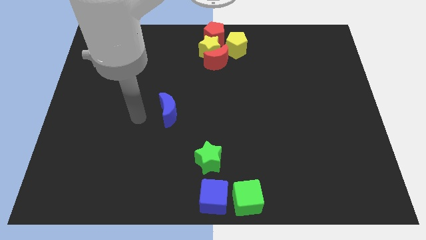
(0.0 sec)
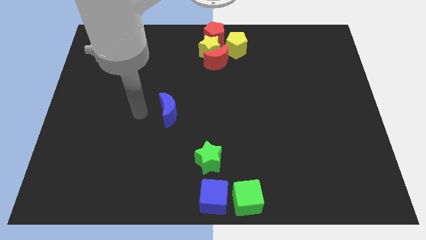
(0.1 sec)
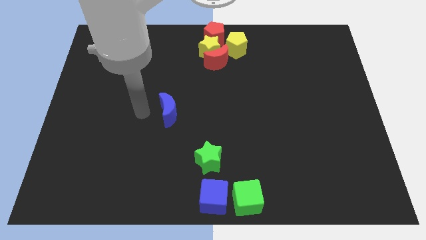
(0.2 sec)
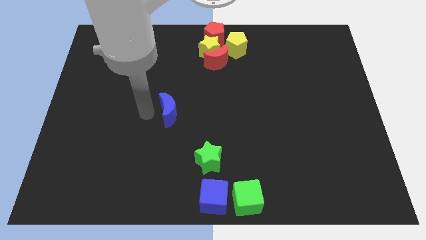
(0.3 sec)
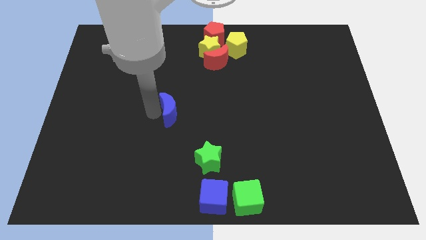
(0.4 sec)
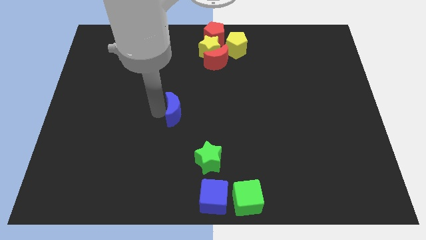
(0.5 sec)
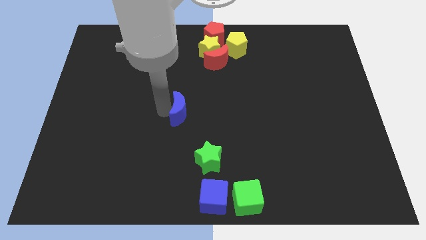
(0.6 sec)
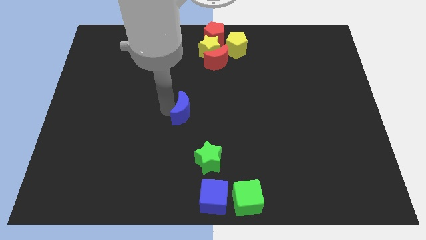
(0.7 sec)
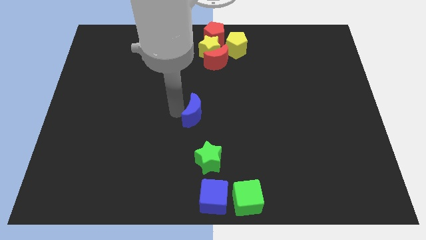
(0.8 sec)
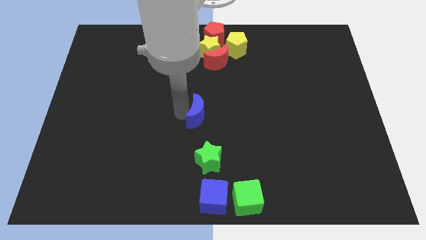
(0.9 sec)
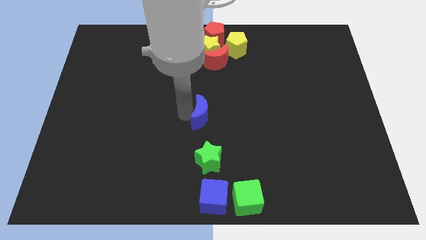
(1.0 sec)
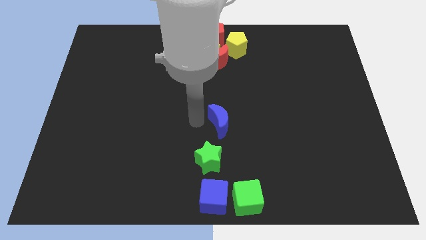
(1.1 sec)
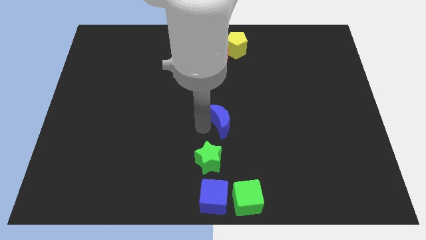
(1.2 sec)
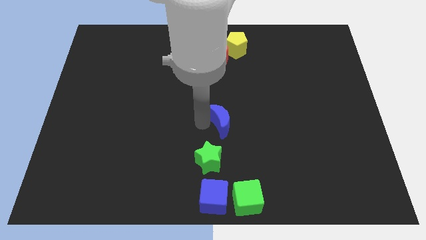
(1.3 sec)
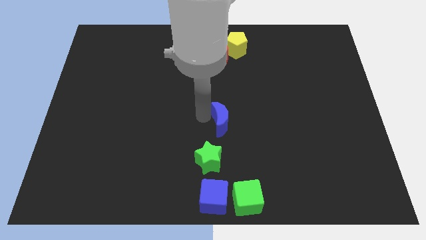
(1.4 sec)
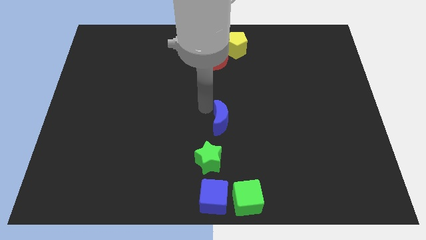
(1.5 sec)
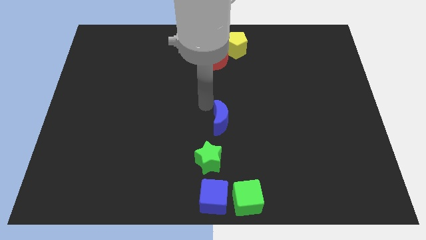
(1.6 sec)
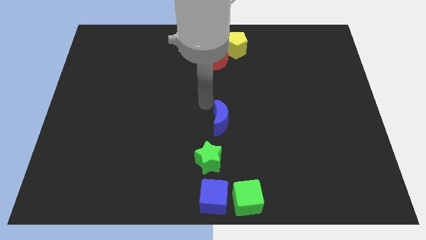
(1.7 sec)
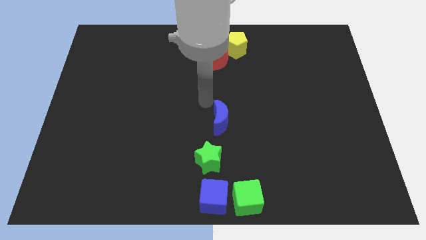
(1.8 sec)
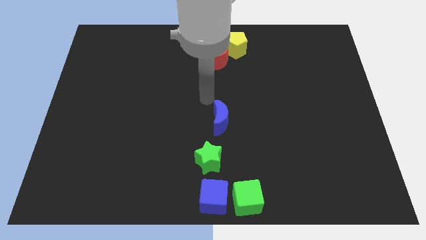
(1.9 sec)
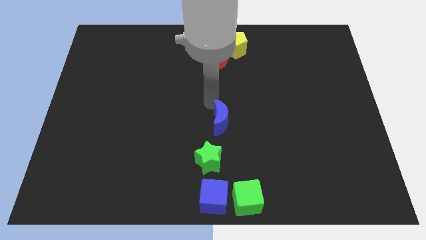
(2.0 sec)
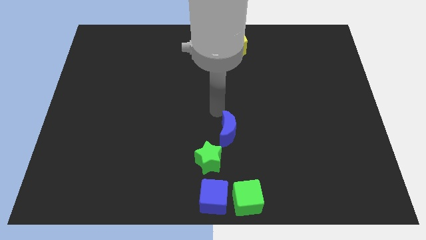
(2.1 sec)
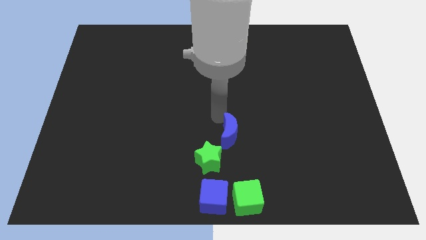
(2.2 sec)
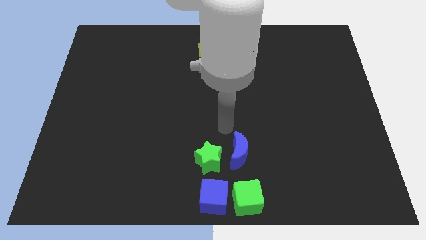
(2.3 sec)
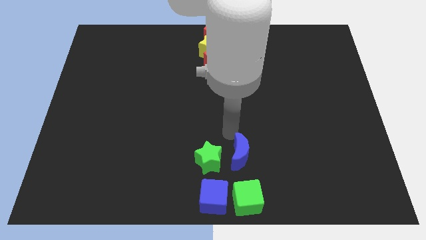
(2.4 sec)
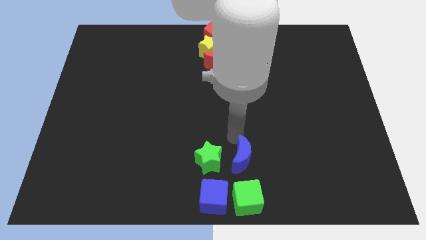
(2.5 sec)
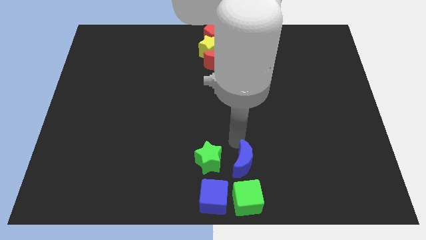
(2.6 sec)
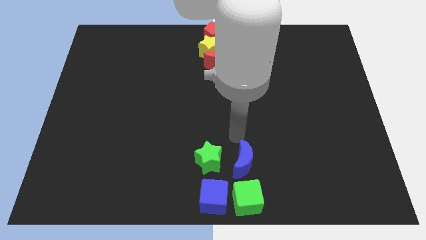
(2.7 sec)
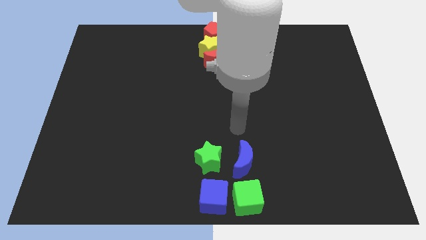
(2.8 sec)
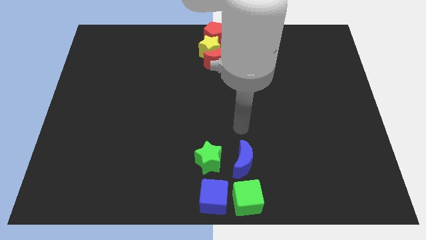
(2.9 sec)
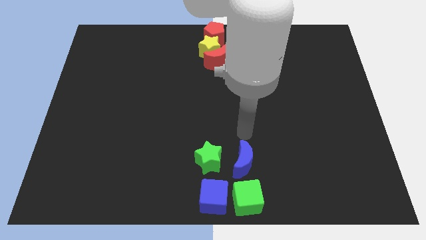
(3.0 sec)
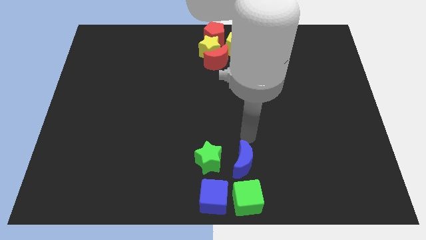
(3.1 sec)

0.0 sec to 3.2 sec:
move the blue moon parallel right to the green star

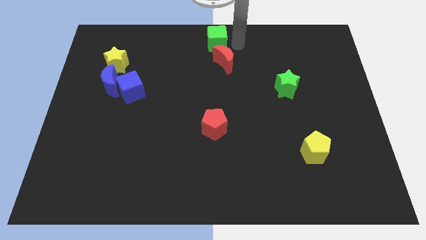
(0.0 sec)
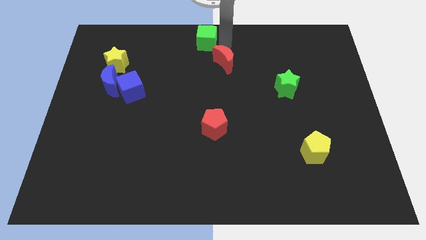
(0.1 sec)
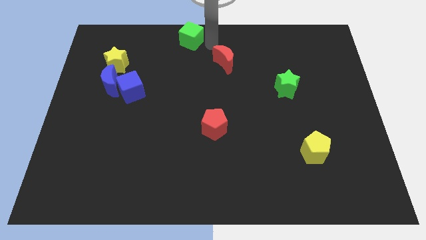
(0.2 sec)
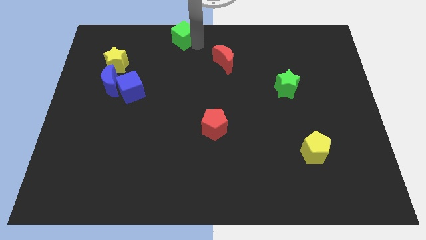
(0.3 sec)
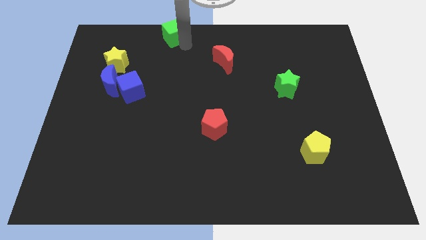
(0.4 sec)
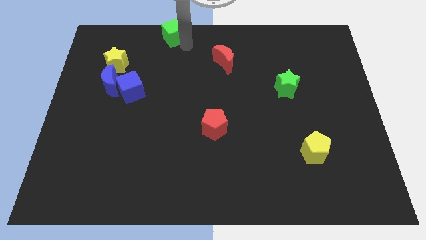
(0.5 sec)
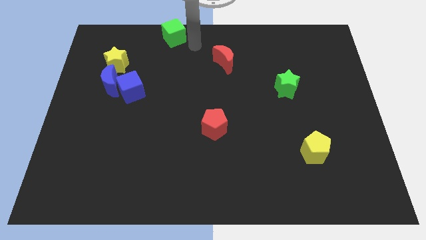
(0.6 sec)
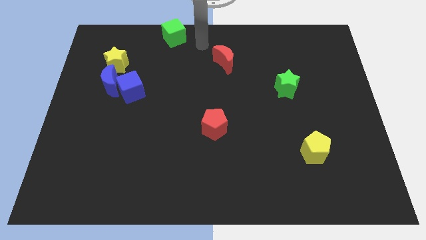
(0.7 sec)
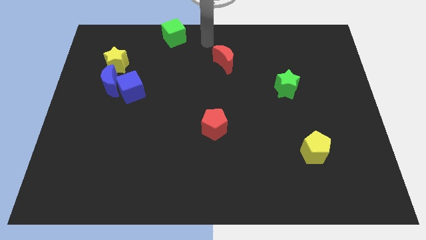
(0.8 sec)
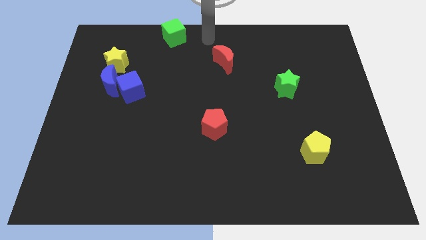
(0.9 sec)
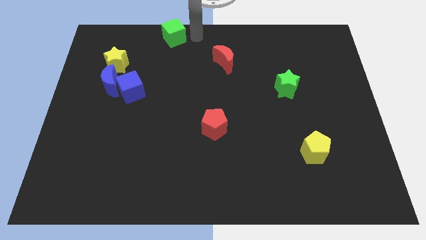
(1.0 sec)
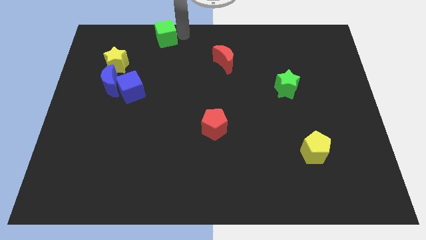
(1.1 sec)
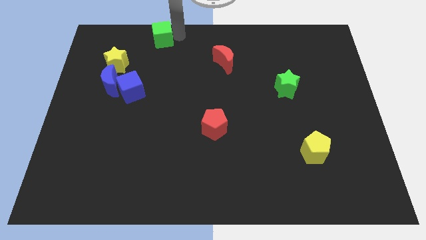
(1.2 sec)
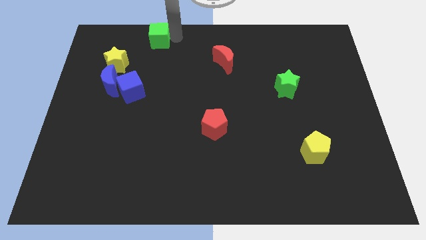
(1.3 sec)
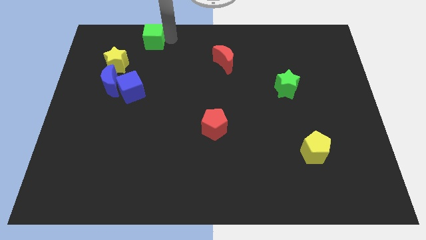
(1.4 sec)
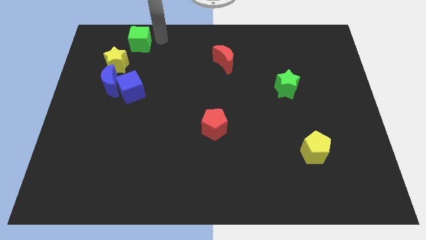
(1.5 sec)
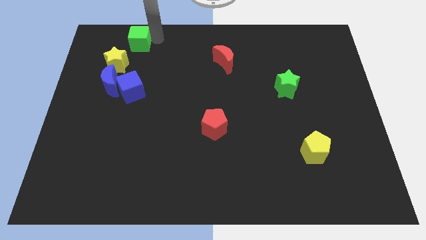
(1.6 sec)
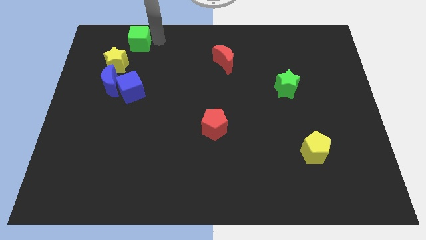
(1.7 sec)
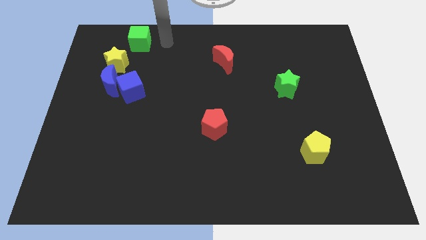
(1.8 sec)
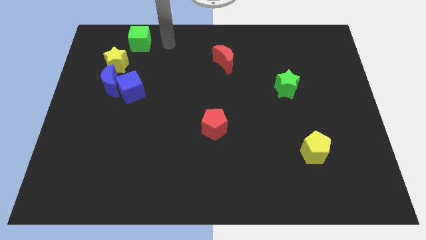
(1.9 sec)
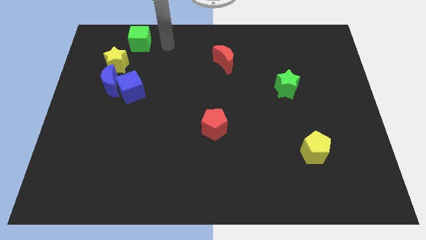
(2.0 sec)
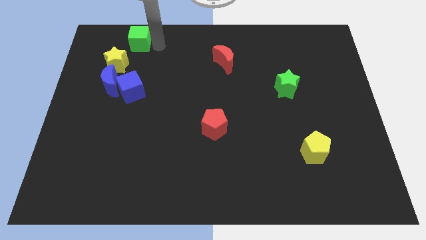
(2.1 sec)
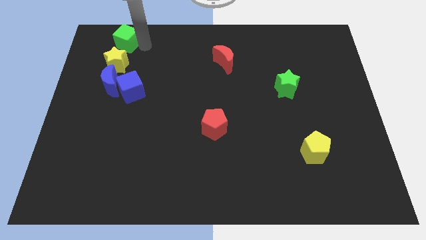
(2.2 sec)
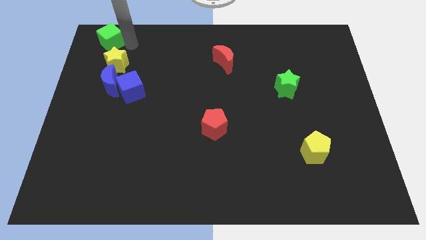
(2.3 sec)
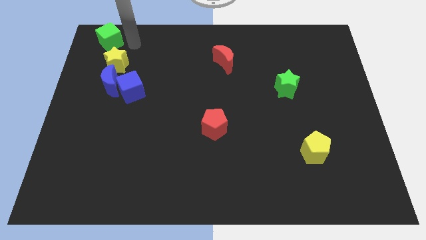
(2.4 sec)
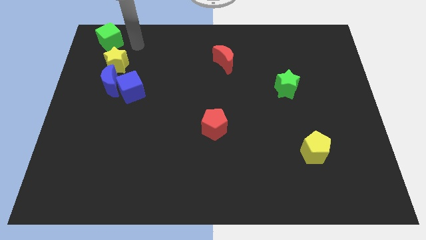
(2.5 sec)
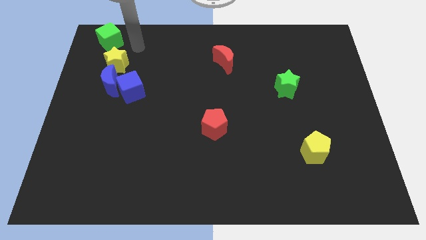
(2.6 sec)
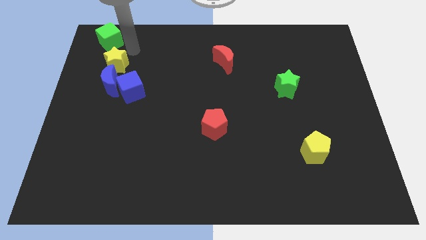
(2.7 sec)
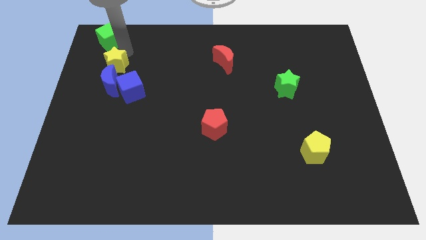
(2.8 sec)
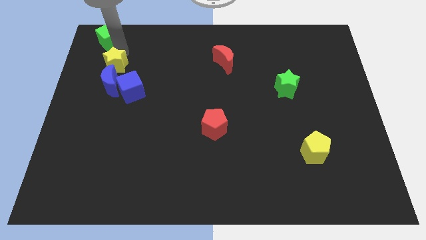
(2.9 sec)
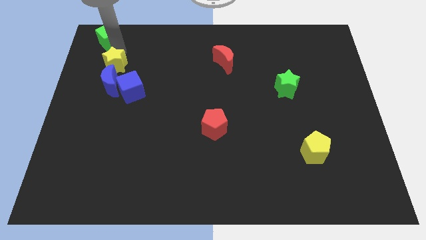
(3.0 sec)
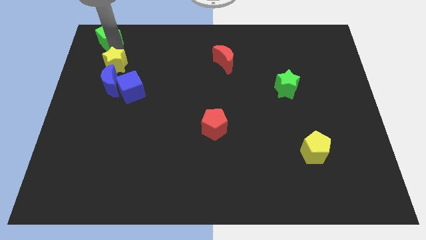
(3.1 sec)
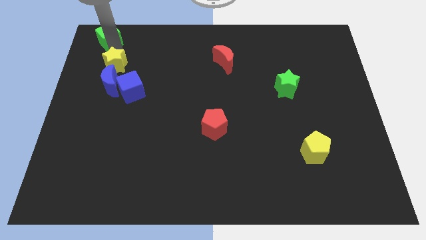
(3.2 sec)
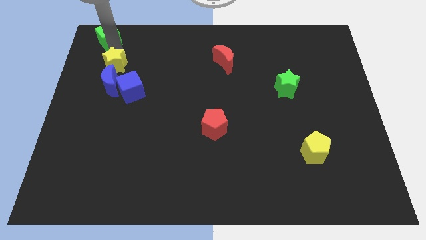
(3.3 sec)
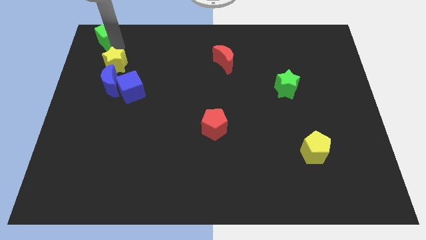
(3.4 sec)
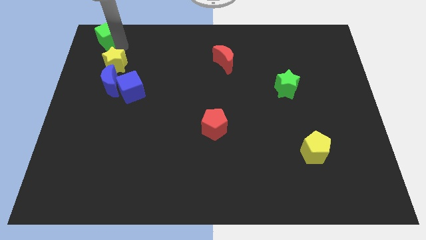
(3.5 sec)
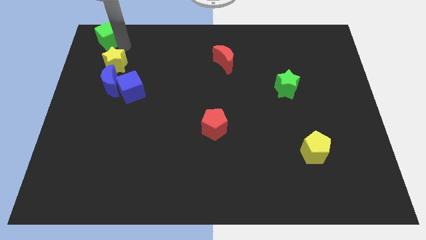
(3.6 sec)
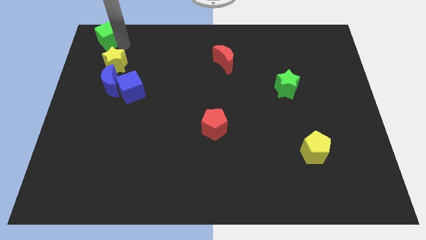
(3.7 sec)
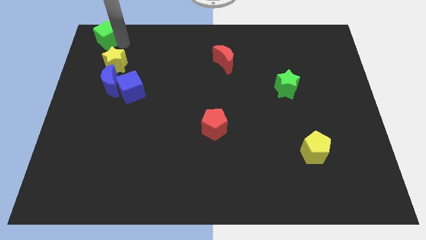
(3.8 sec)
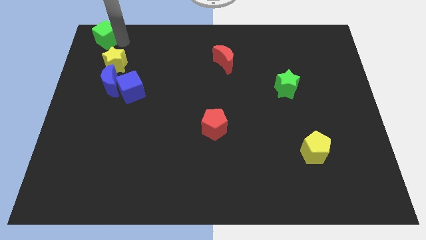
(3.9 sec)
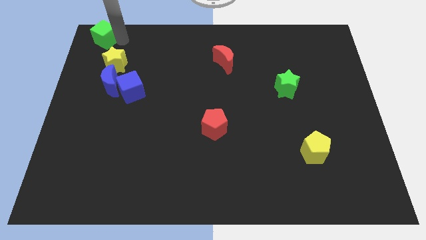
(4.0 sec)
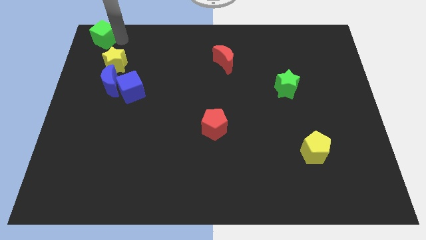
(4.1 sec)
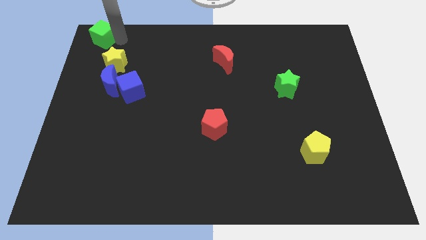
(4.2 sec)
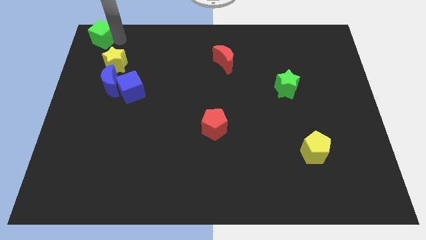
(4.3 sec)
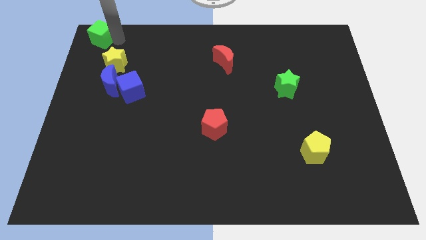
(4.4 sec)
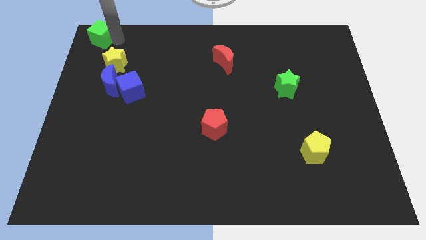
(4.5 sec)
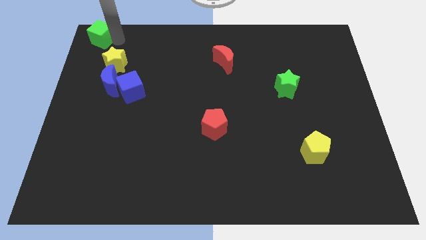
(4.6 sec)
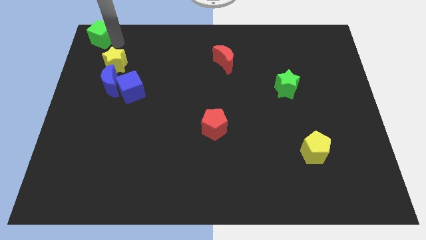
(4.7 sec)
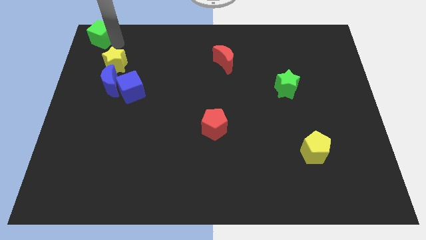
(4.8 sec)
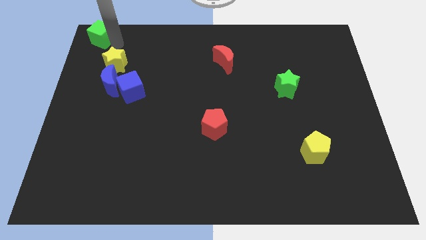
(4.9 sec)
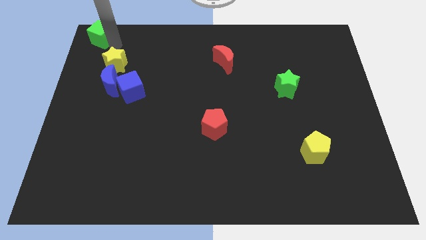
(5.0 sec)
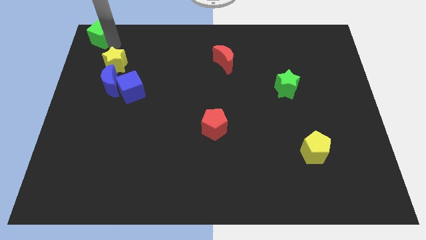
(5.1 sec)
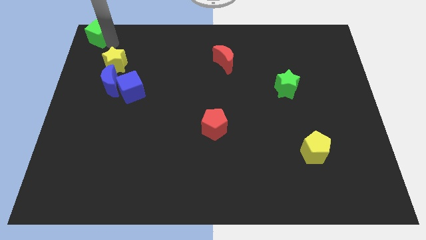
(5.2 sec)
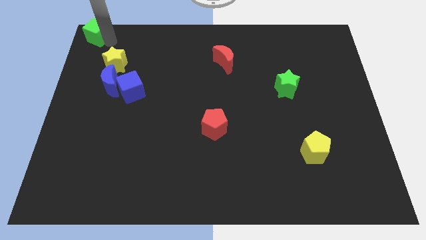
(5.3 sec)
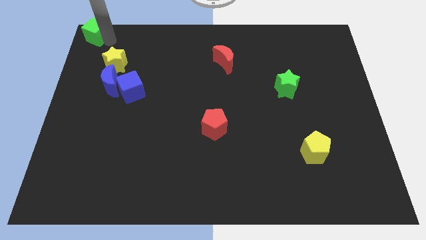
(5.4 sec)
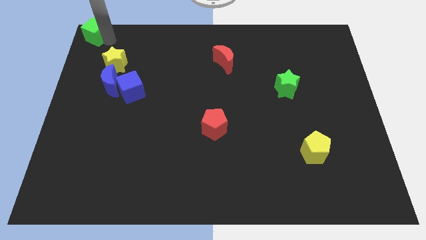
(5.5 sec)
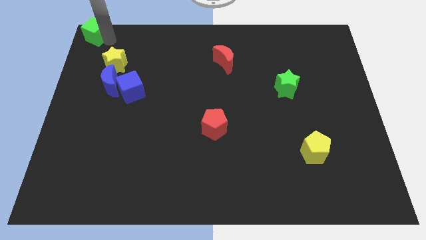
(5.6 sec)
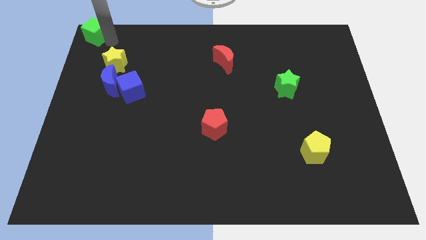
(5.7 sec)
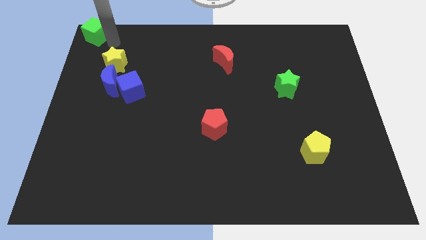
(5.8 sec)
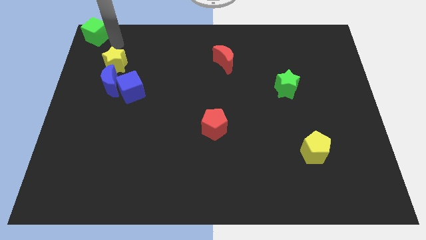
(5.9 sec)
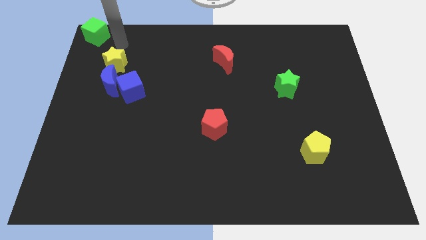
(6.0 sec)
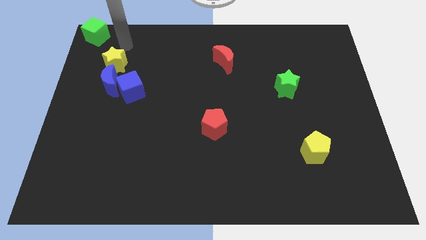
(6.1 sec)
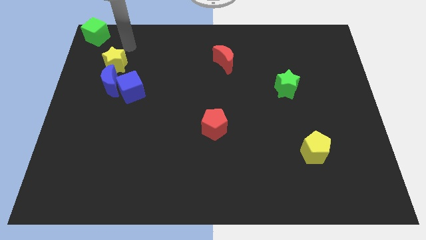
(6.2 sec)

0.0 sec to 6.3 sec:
put the green cube at the top left corner of the board
